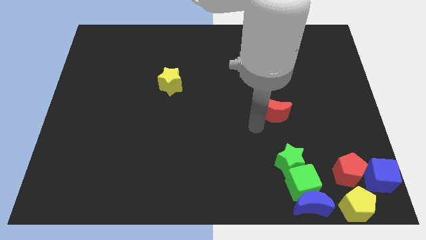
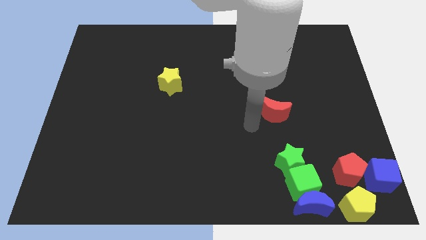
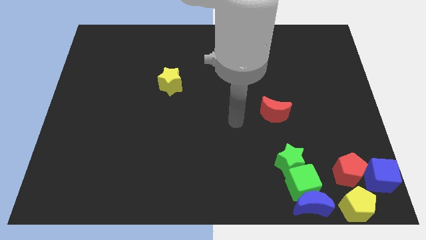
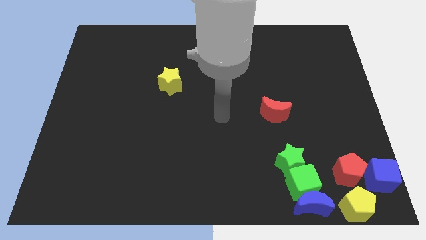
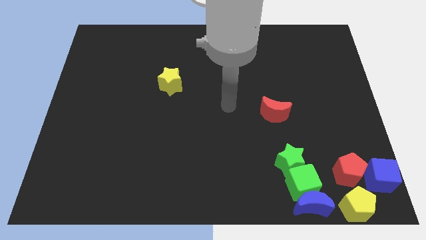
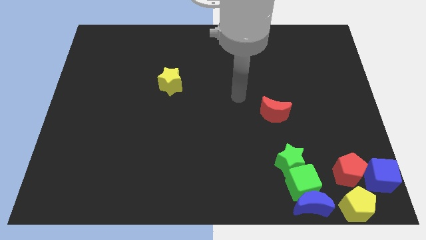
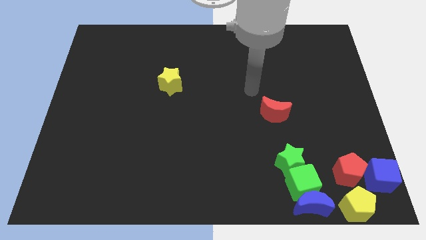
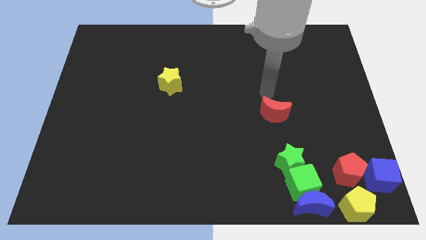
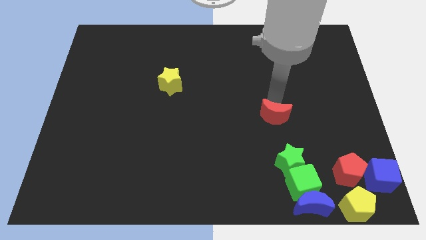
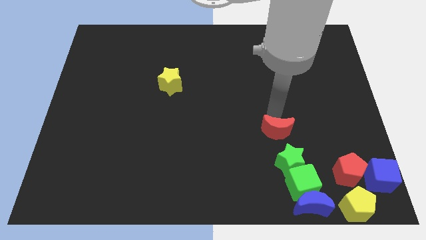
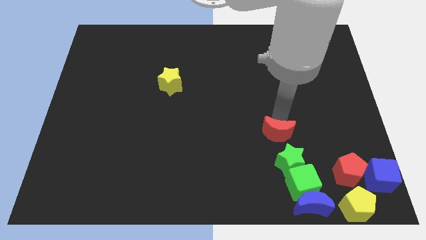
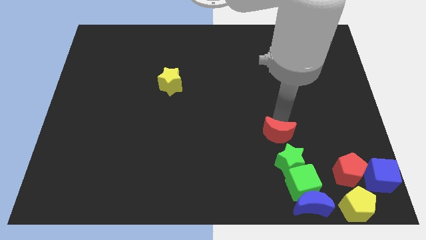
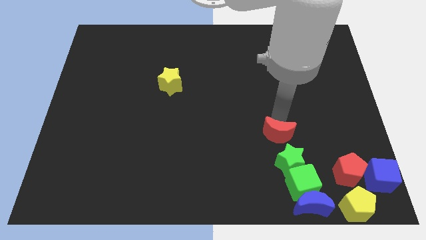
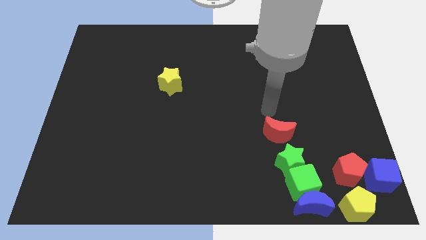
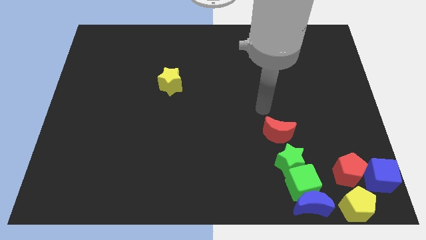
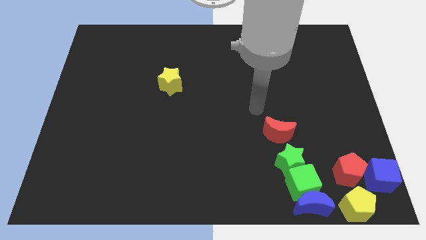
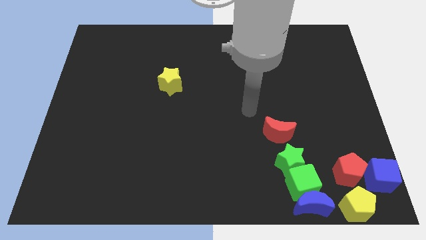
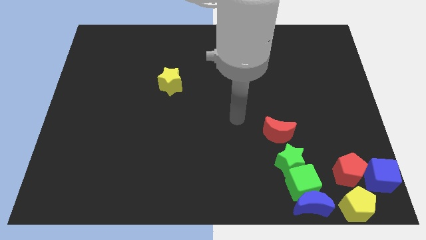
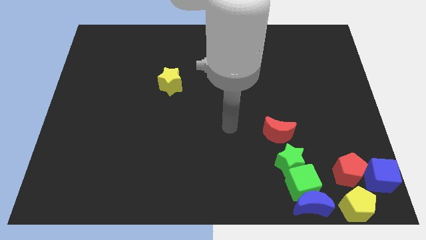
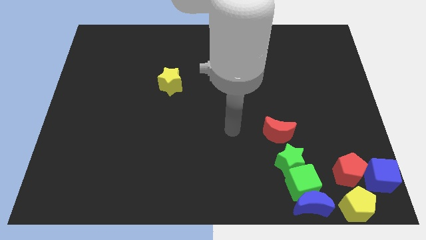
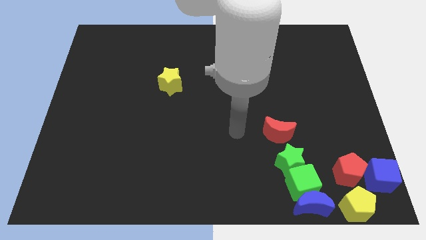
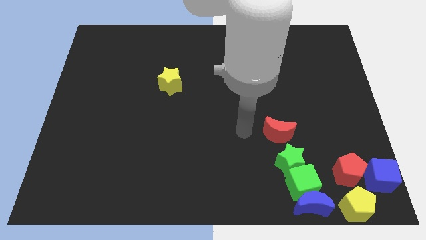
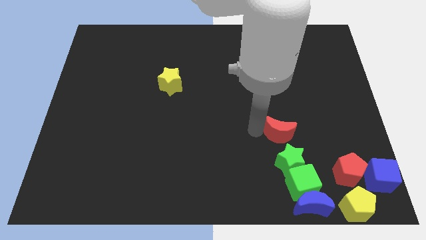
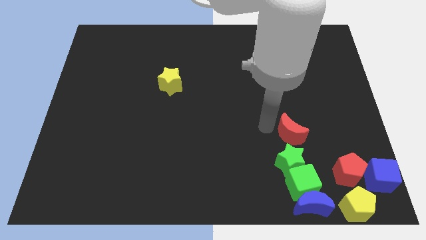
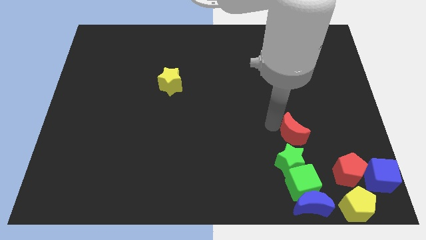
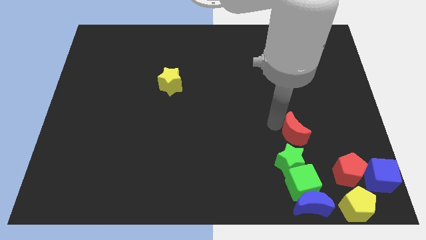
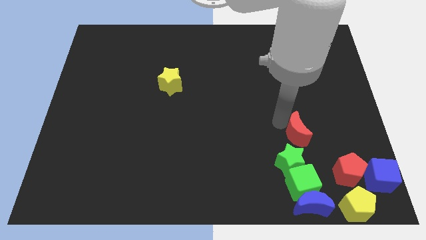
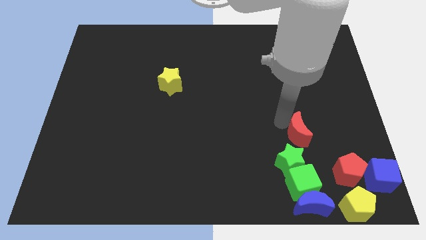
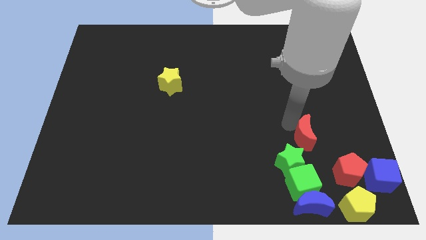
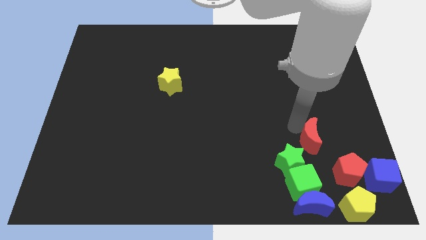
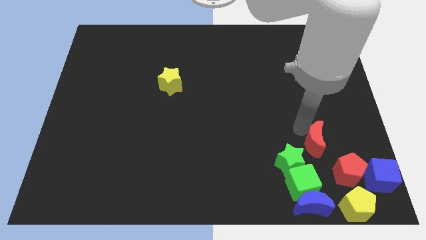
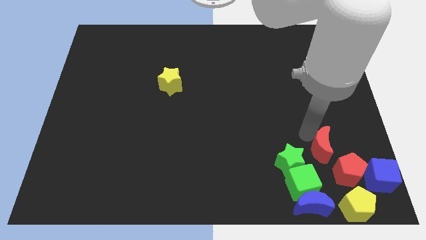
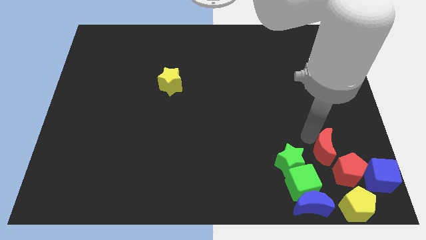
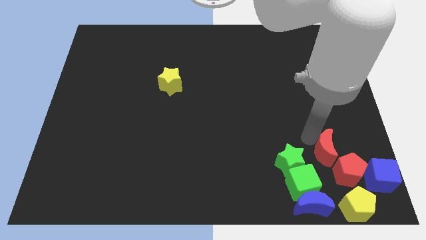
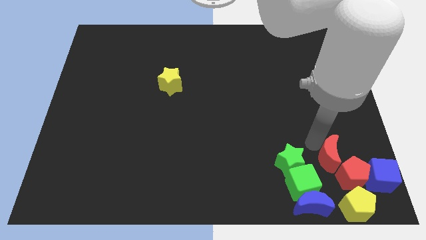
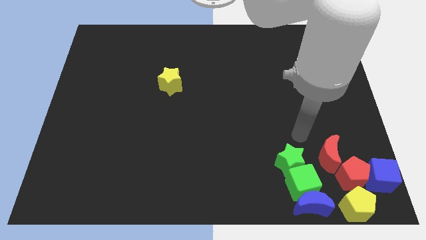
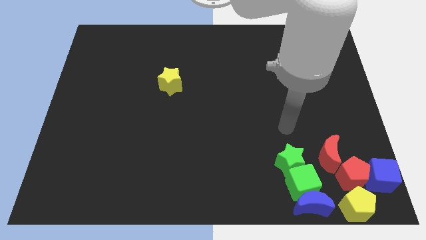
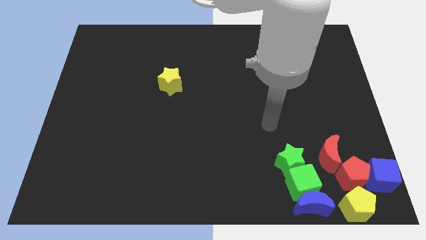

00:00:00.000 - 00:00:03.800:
push the red moon into red pentagon

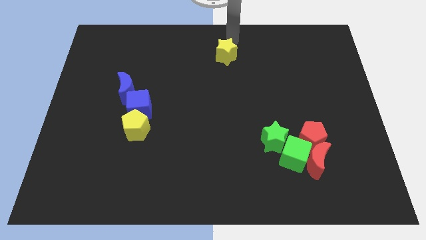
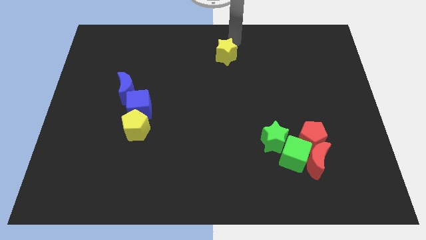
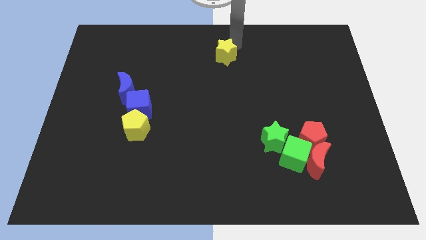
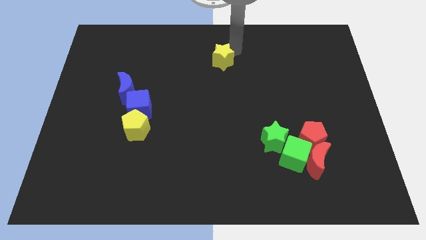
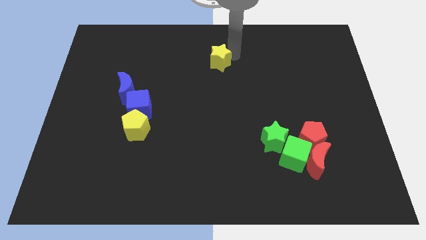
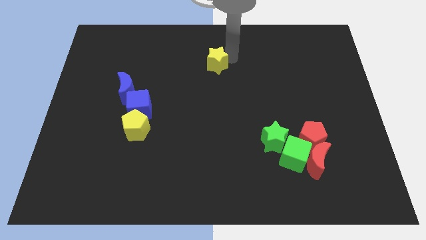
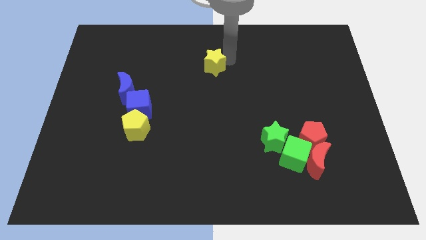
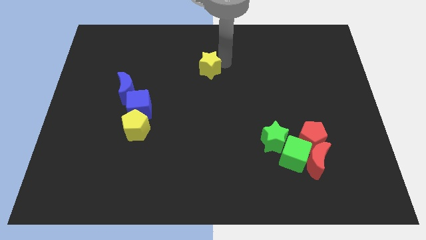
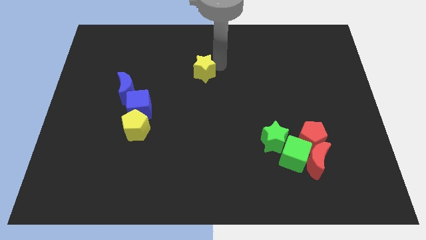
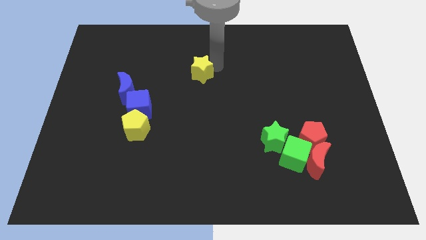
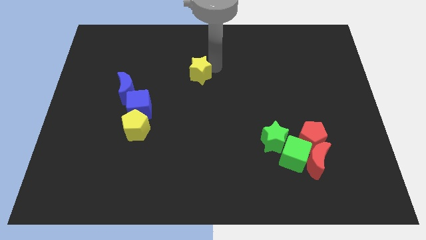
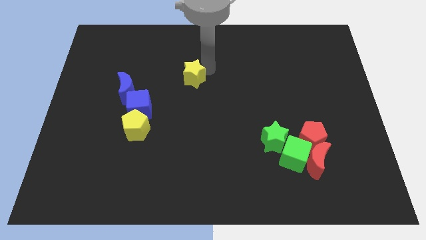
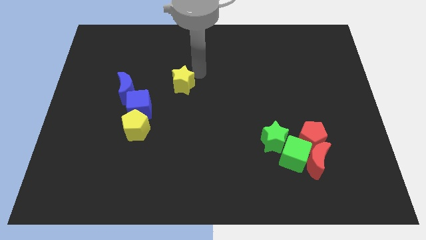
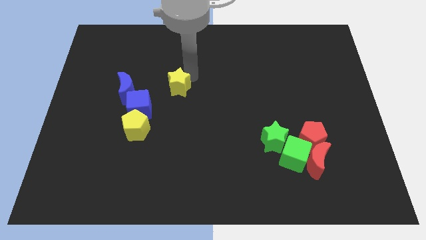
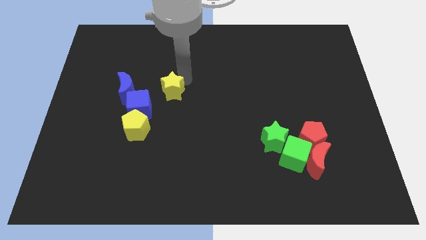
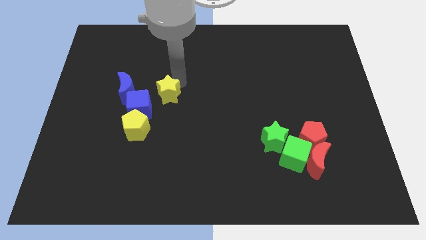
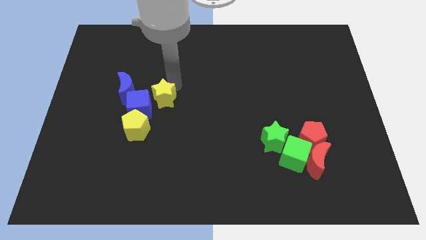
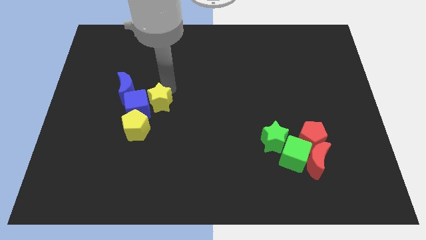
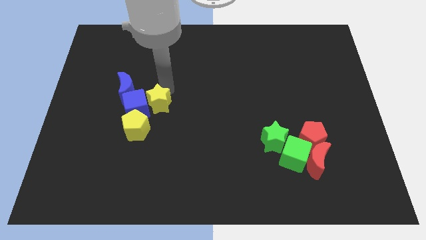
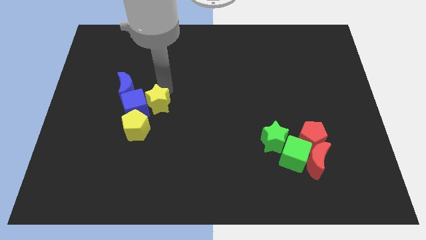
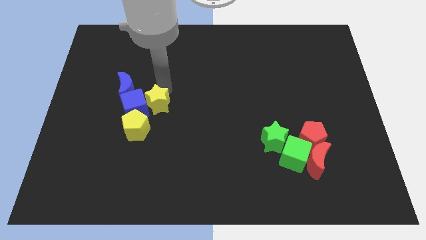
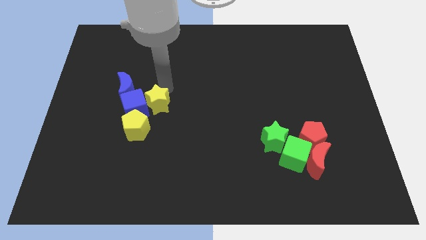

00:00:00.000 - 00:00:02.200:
push the yellow star to the right of blue cube

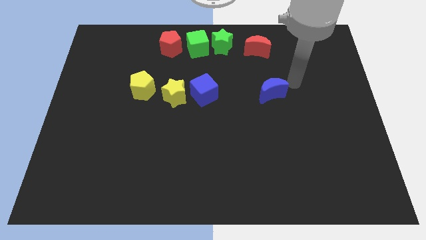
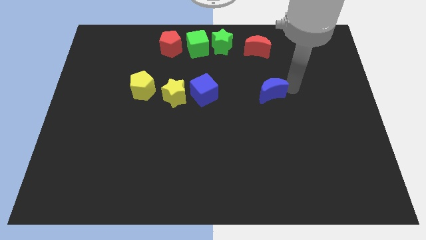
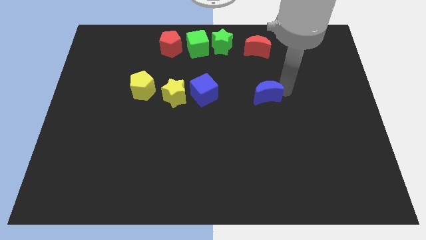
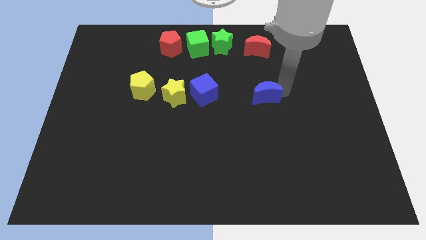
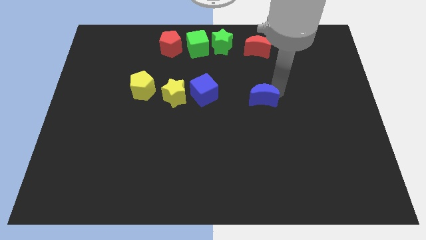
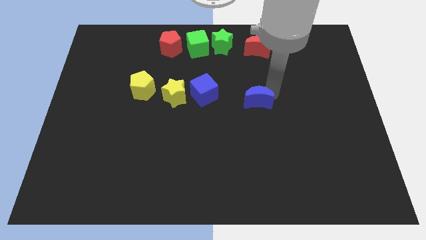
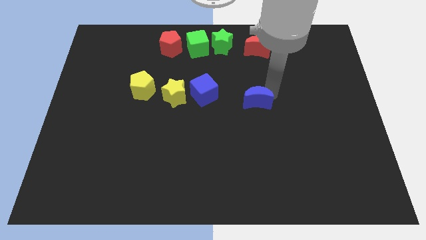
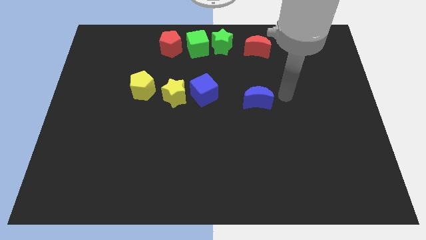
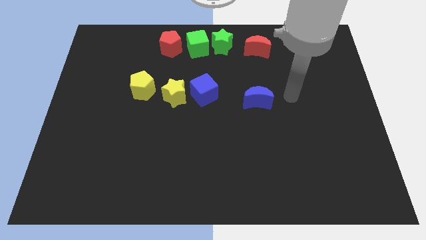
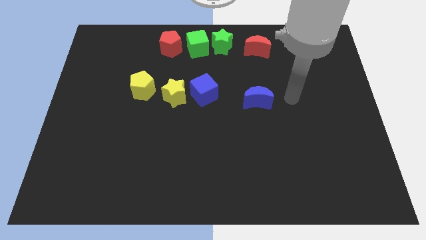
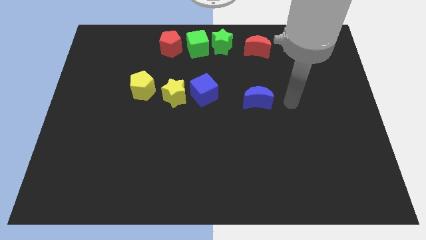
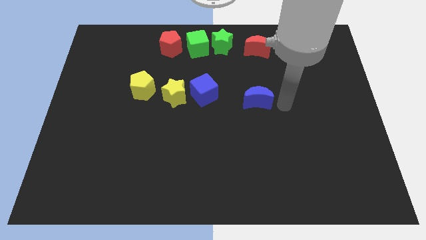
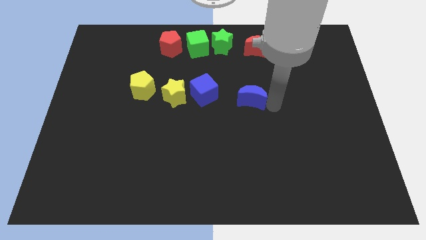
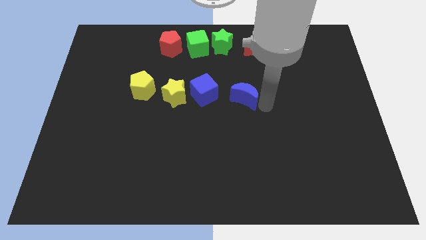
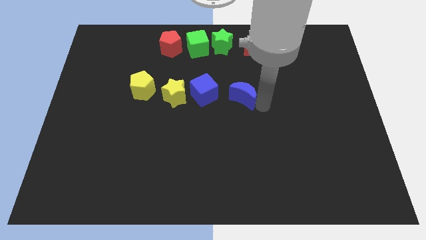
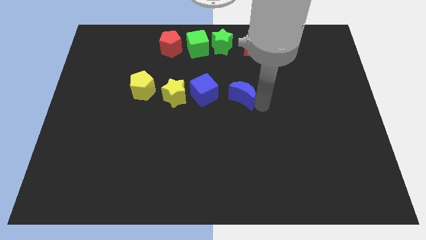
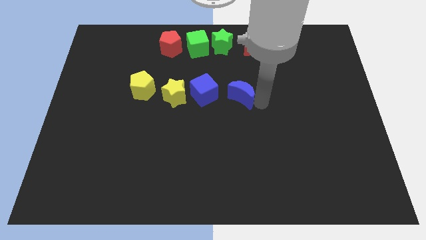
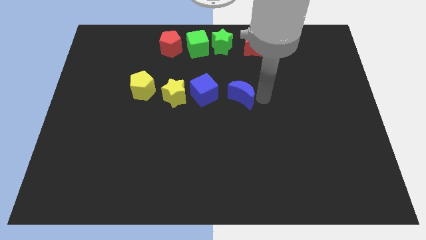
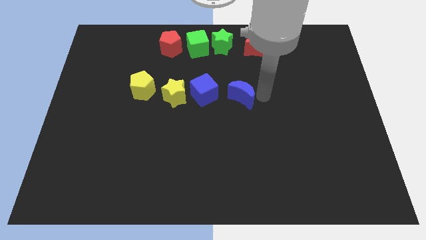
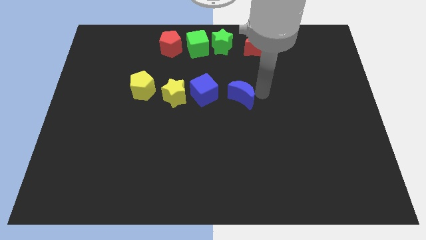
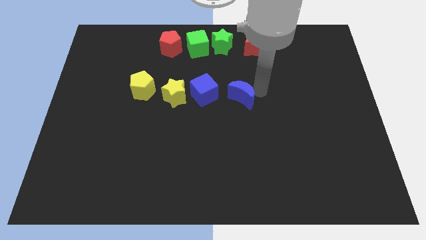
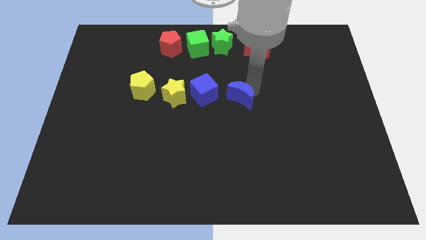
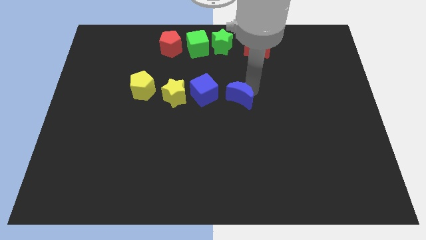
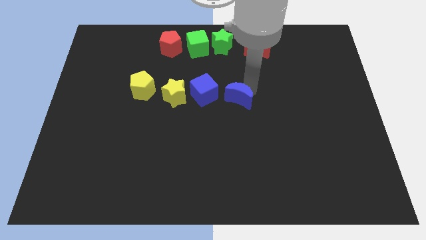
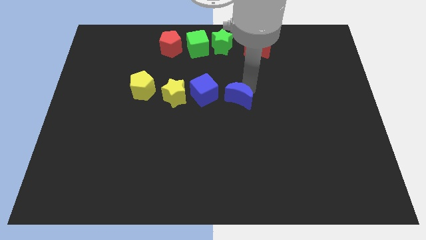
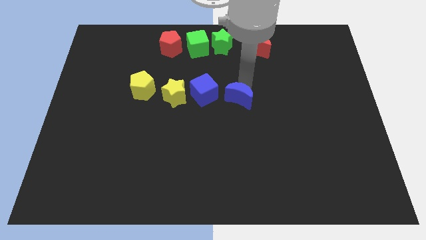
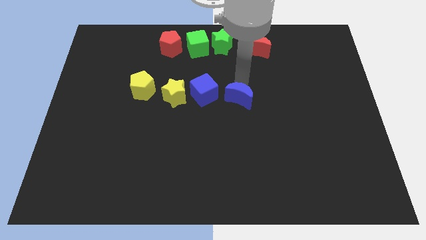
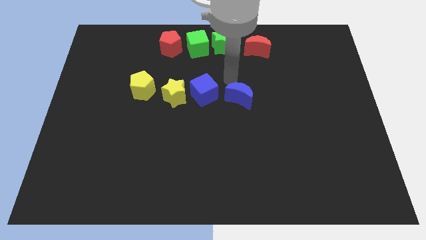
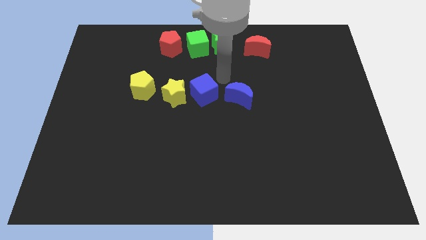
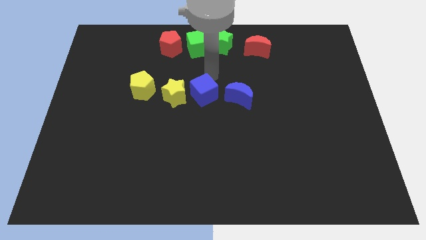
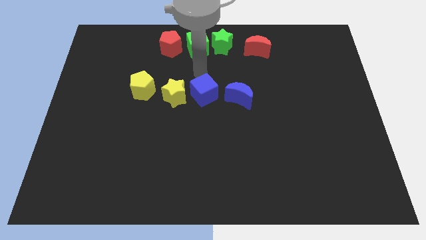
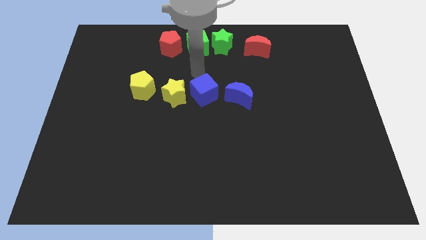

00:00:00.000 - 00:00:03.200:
move the blue crescent close to the blue cube
